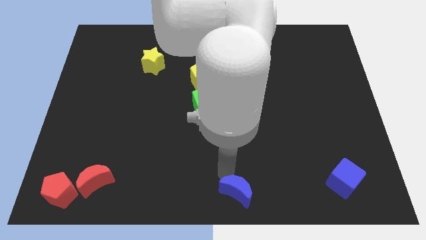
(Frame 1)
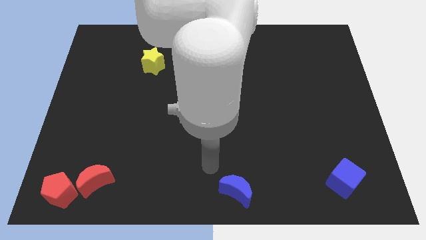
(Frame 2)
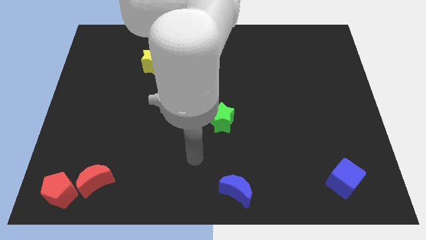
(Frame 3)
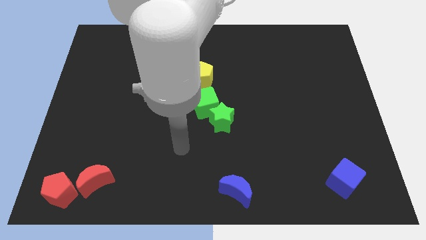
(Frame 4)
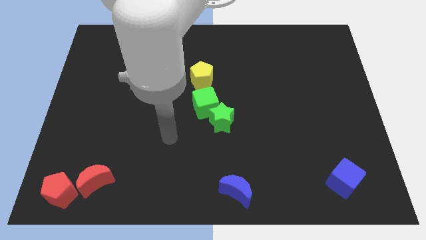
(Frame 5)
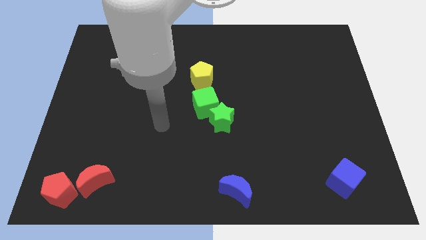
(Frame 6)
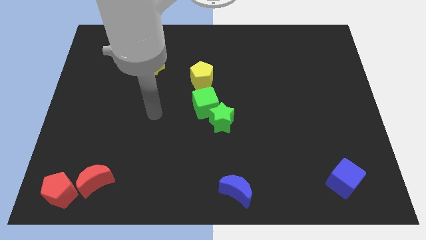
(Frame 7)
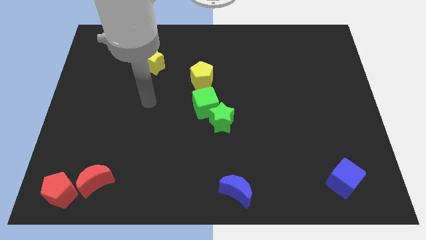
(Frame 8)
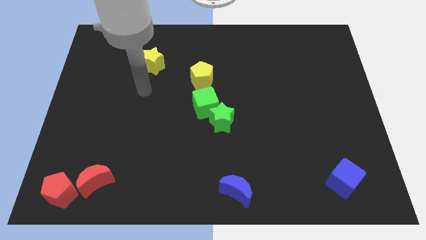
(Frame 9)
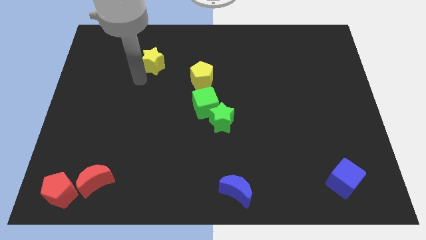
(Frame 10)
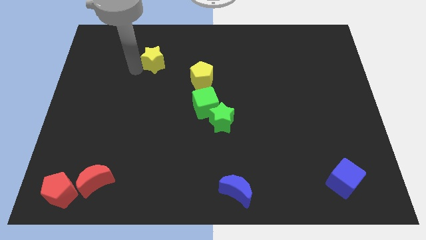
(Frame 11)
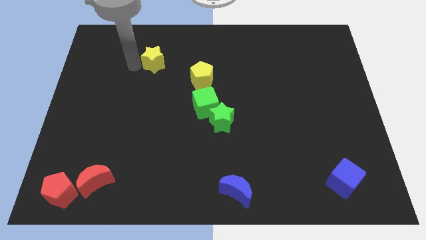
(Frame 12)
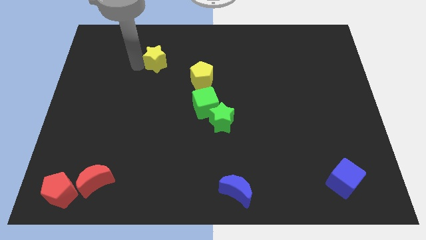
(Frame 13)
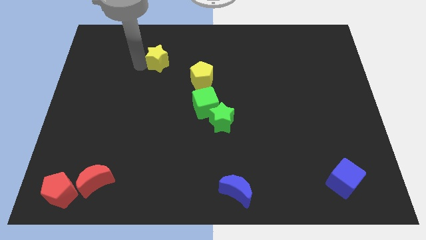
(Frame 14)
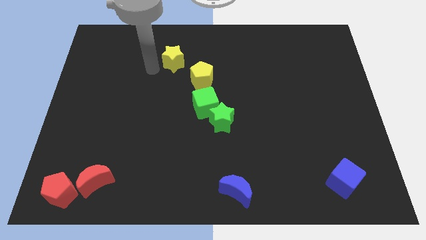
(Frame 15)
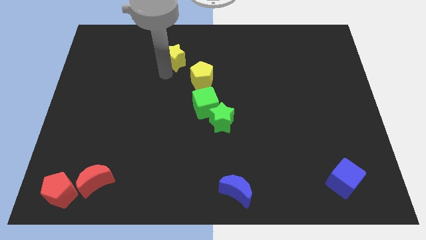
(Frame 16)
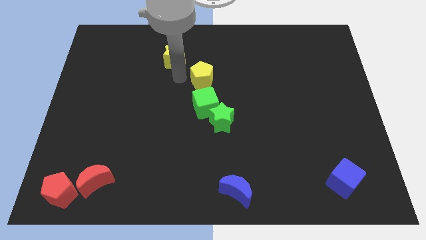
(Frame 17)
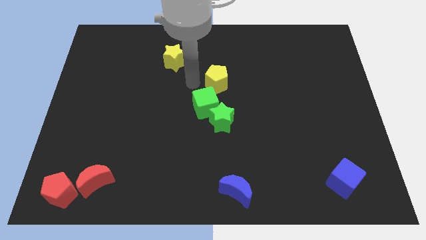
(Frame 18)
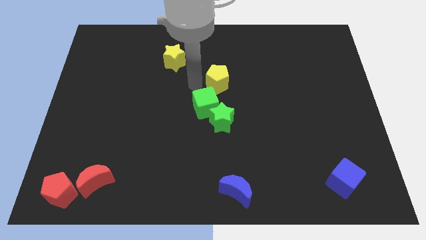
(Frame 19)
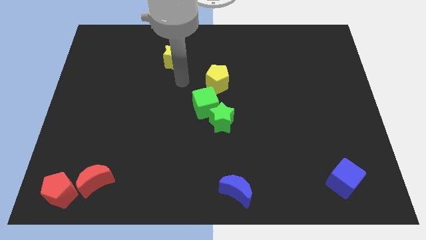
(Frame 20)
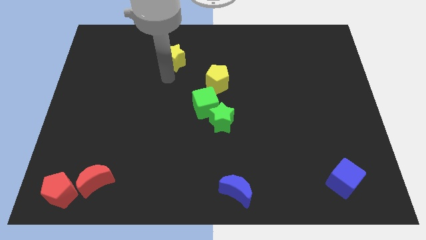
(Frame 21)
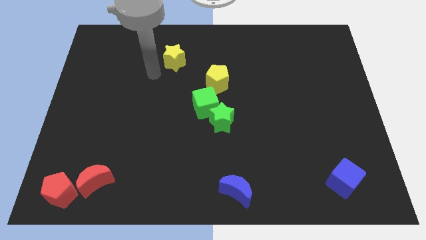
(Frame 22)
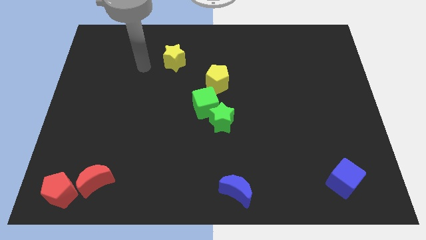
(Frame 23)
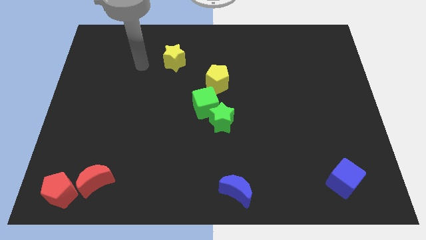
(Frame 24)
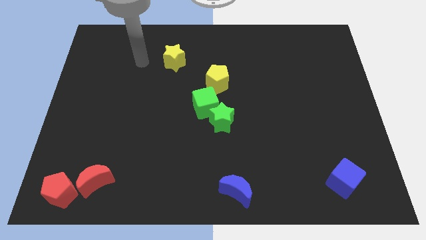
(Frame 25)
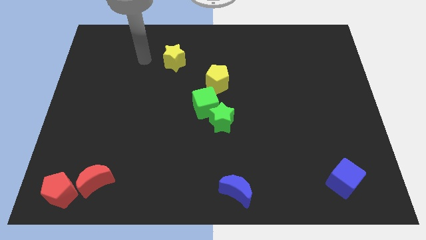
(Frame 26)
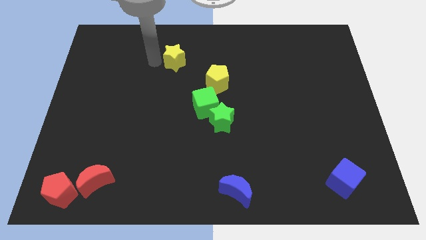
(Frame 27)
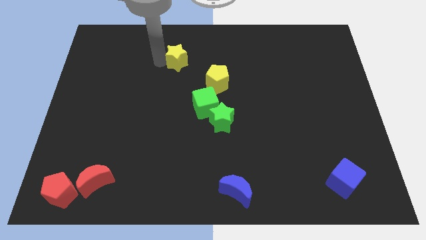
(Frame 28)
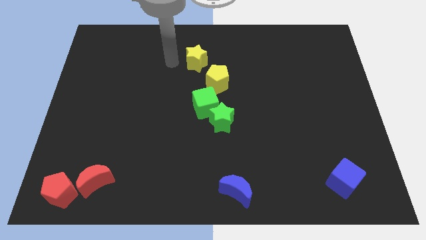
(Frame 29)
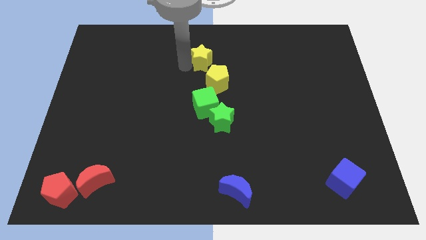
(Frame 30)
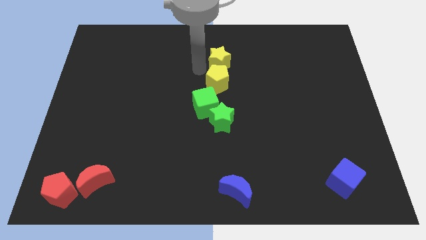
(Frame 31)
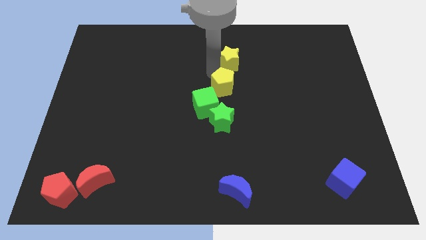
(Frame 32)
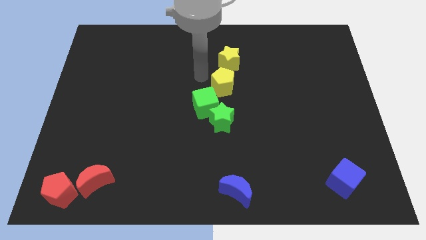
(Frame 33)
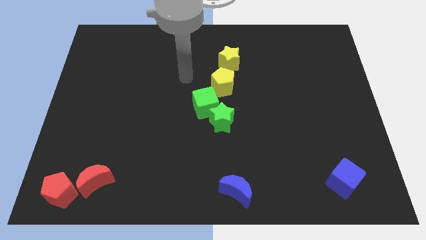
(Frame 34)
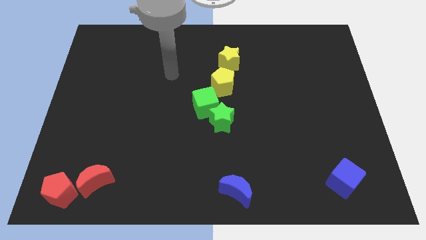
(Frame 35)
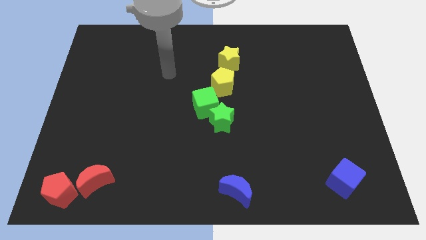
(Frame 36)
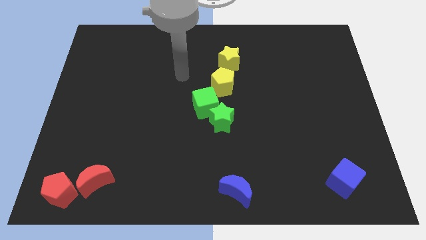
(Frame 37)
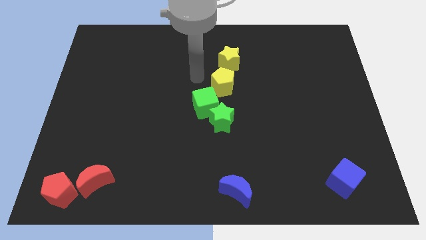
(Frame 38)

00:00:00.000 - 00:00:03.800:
push the yellow blocks towards the right side of the board

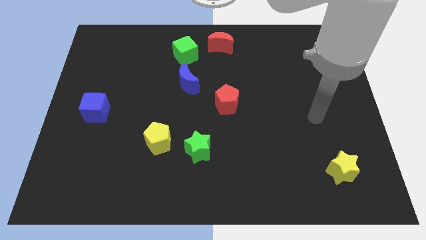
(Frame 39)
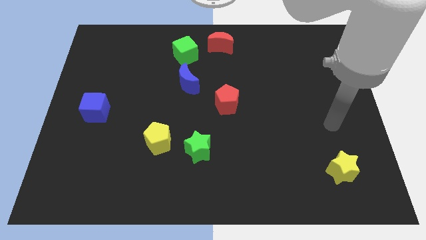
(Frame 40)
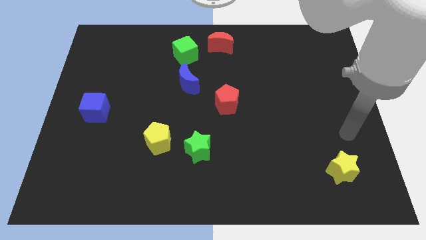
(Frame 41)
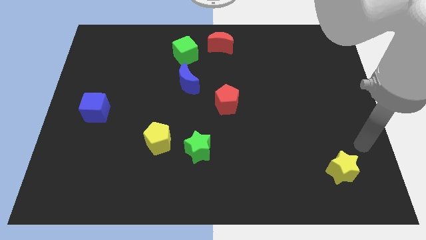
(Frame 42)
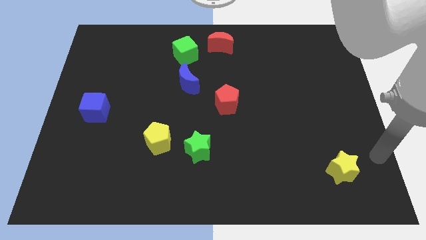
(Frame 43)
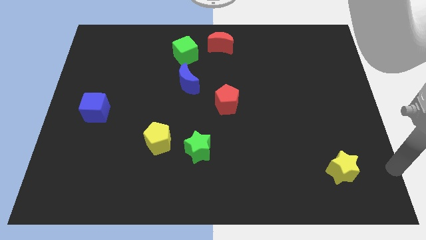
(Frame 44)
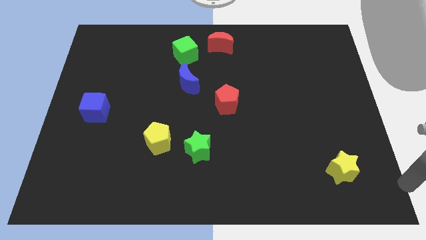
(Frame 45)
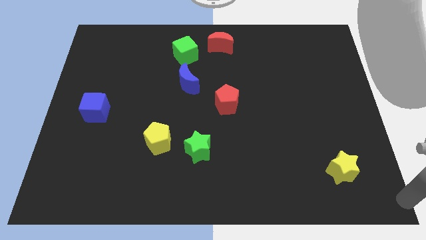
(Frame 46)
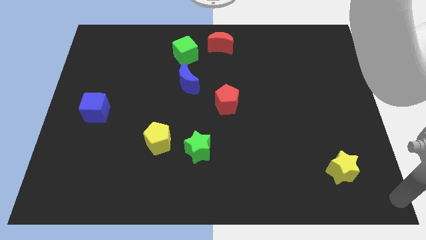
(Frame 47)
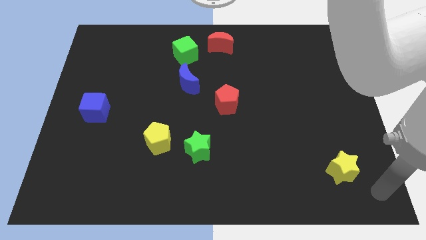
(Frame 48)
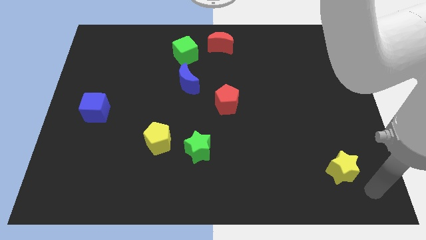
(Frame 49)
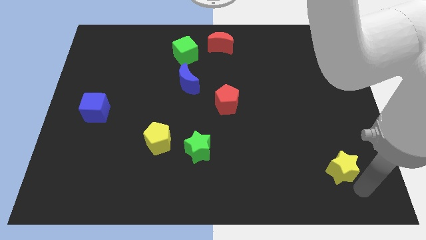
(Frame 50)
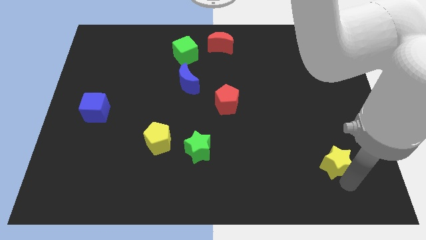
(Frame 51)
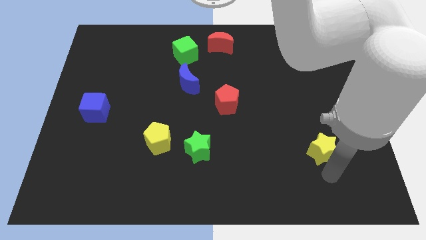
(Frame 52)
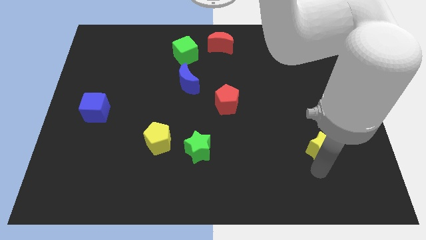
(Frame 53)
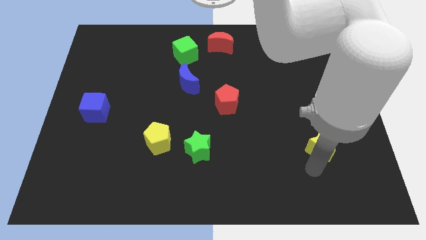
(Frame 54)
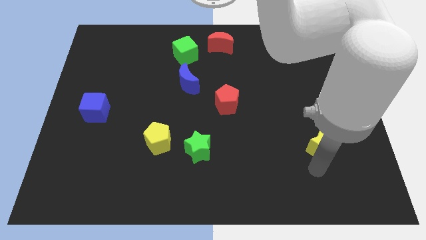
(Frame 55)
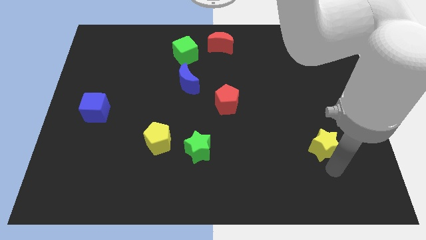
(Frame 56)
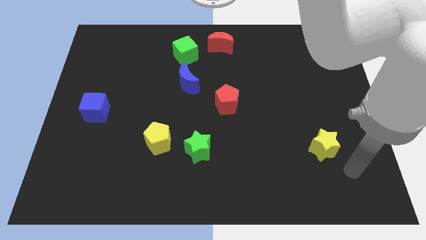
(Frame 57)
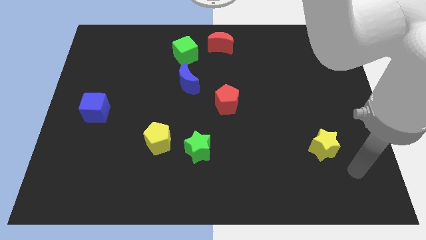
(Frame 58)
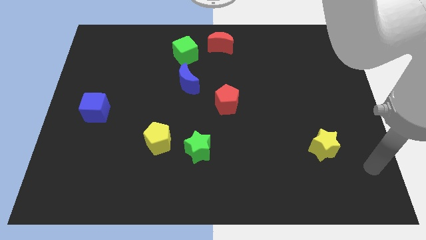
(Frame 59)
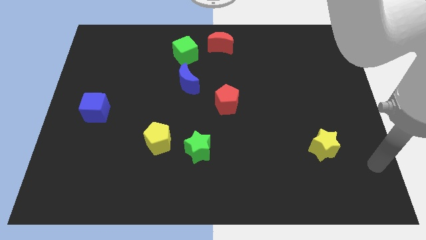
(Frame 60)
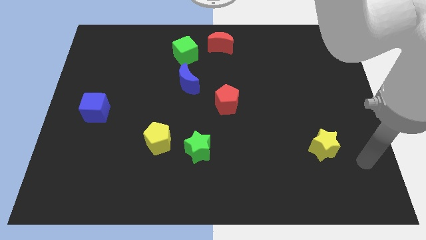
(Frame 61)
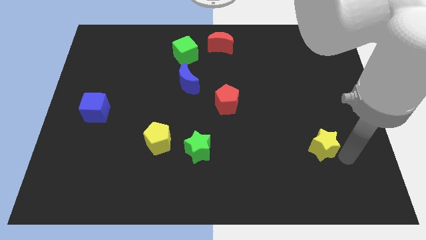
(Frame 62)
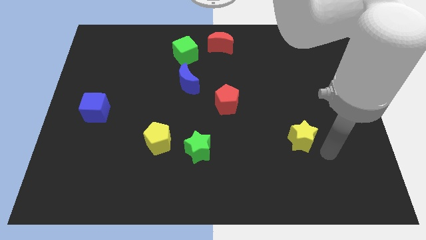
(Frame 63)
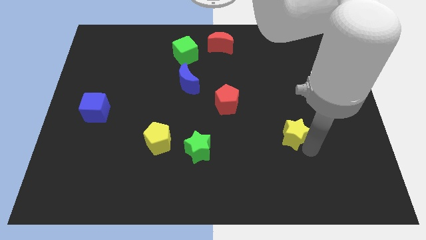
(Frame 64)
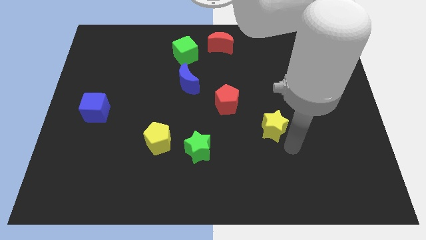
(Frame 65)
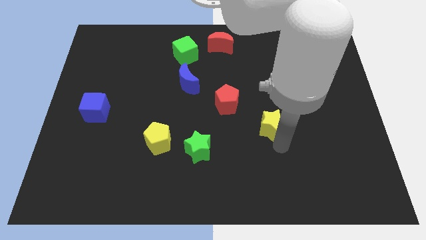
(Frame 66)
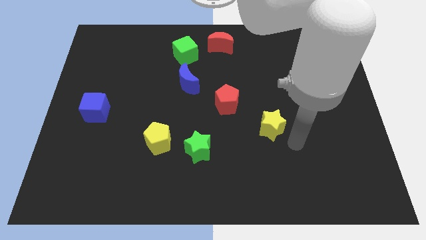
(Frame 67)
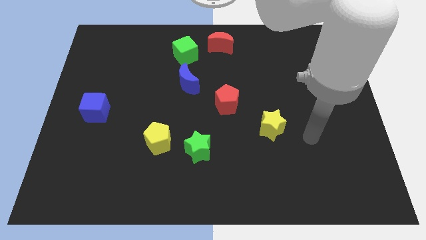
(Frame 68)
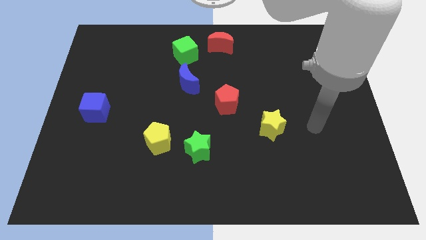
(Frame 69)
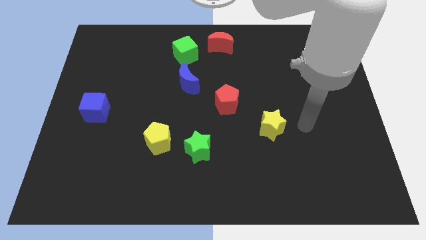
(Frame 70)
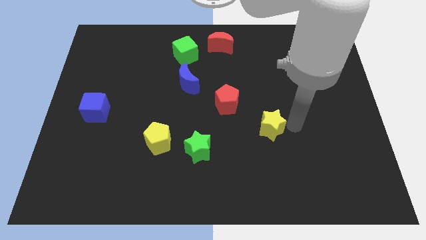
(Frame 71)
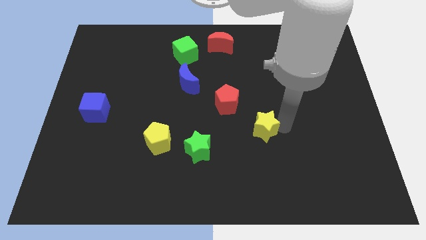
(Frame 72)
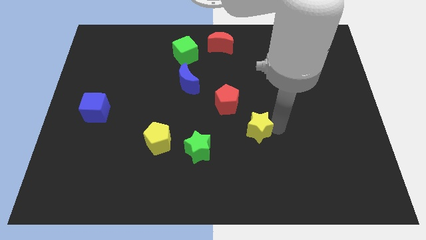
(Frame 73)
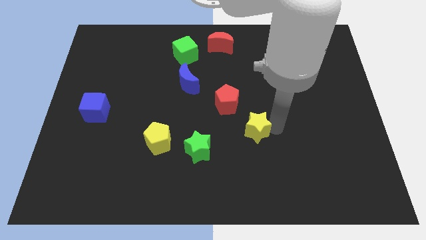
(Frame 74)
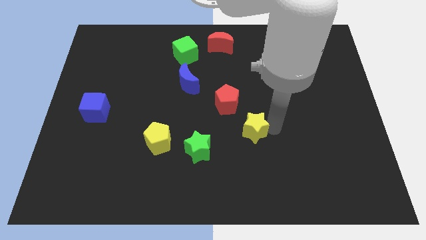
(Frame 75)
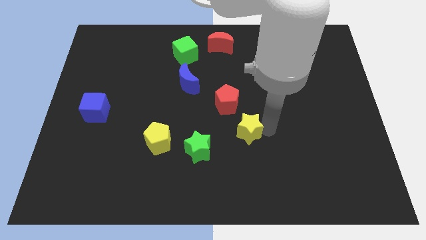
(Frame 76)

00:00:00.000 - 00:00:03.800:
push the yellow star diagnol to the red pentagon

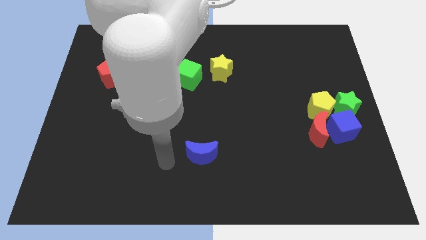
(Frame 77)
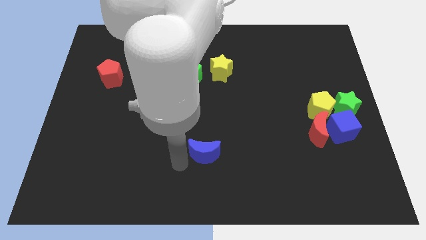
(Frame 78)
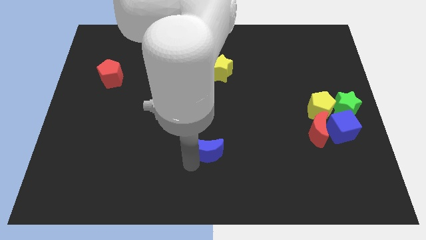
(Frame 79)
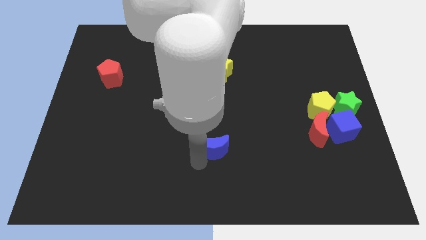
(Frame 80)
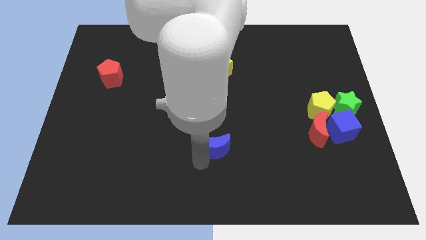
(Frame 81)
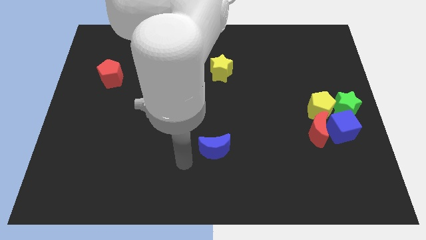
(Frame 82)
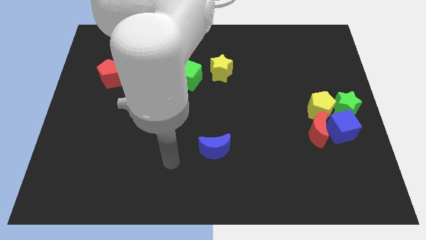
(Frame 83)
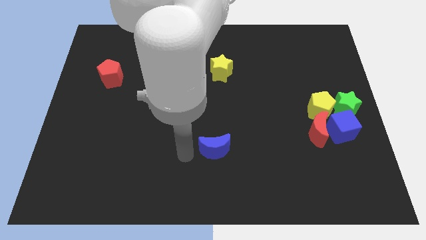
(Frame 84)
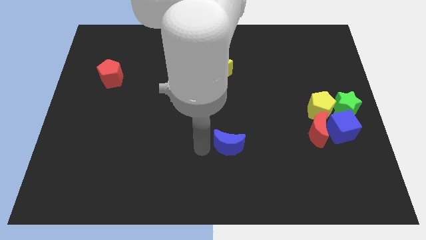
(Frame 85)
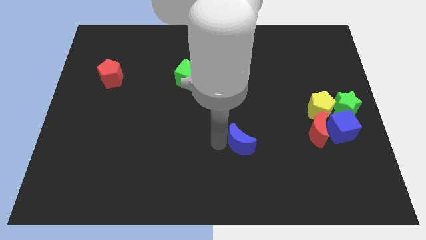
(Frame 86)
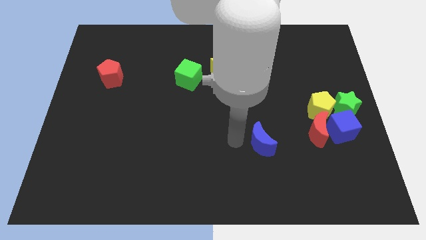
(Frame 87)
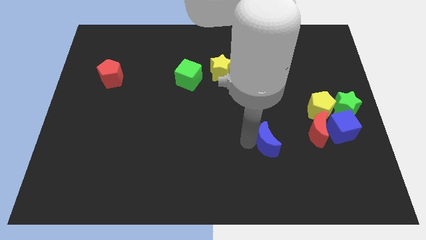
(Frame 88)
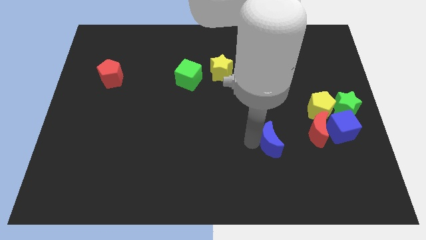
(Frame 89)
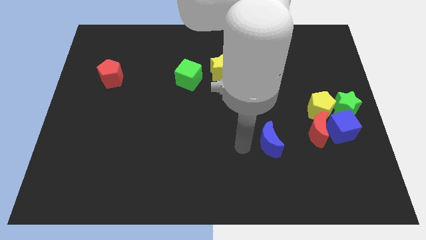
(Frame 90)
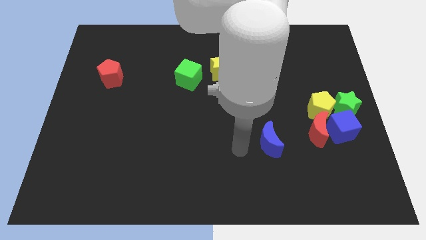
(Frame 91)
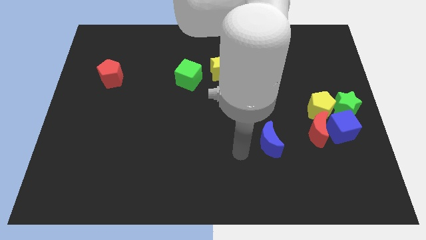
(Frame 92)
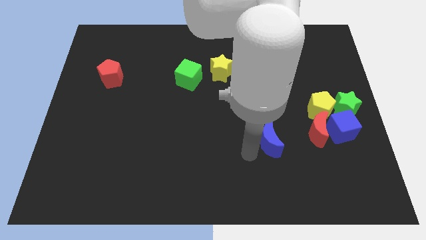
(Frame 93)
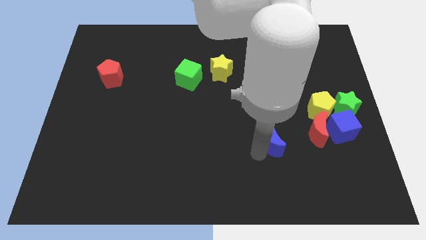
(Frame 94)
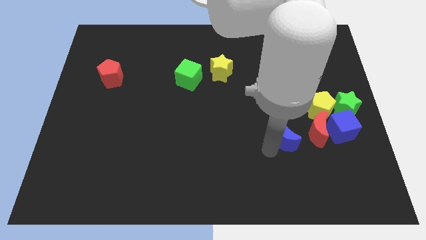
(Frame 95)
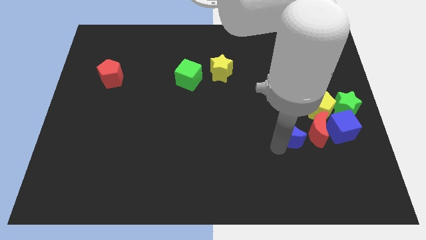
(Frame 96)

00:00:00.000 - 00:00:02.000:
place the blue moon left to the red moon
